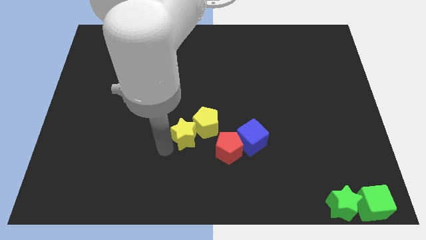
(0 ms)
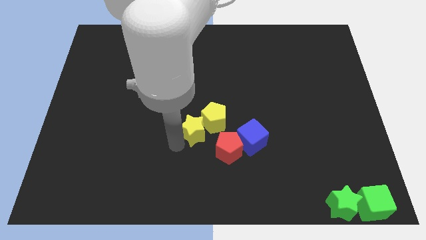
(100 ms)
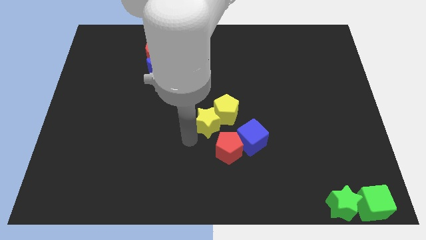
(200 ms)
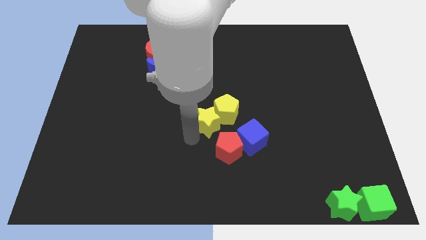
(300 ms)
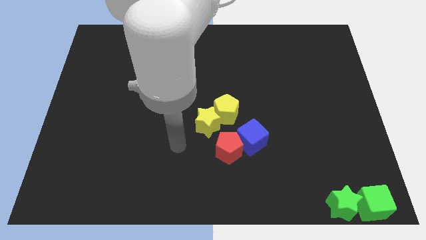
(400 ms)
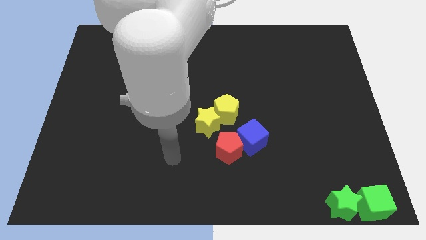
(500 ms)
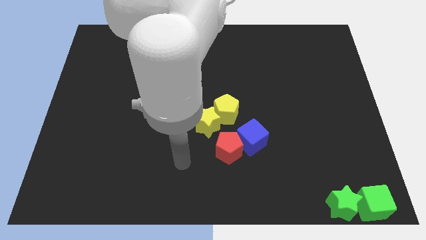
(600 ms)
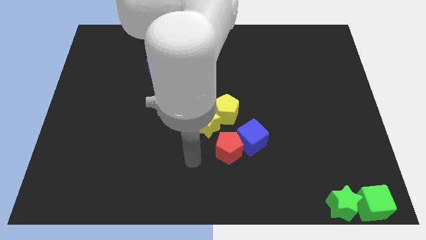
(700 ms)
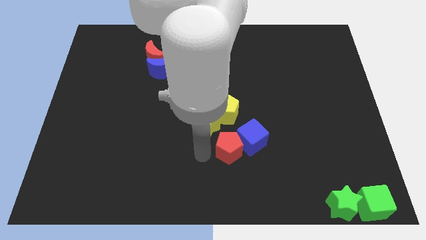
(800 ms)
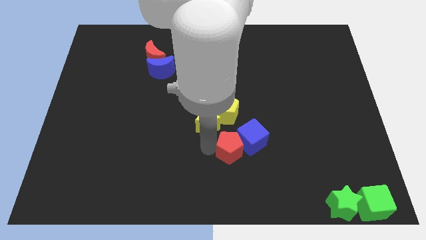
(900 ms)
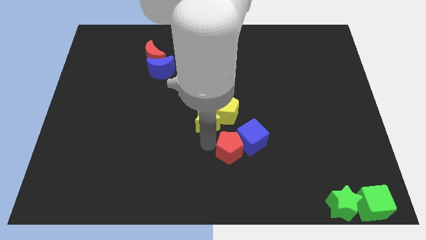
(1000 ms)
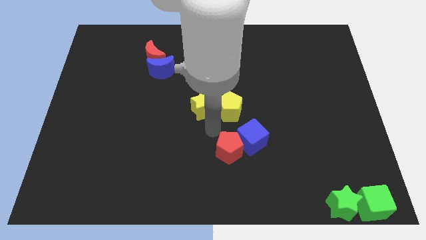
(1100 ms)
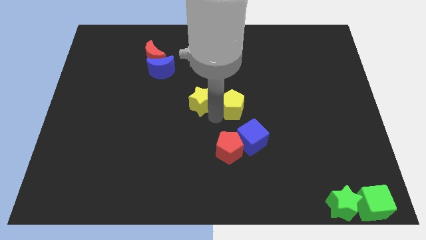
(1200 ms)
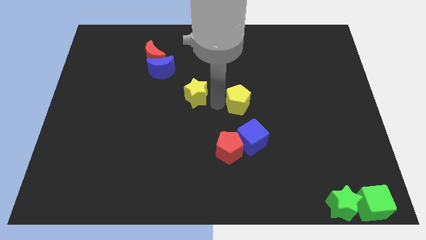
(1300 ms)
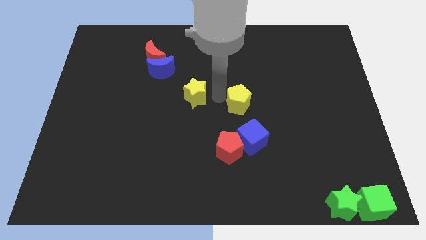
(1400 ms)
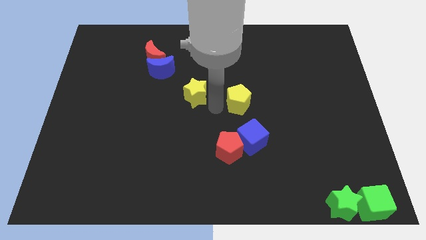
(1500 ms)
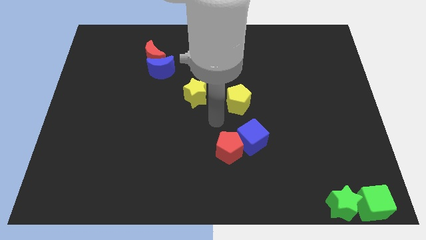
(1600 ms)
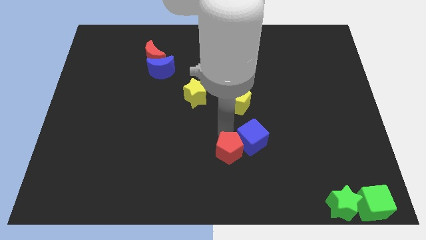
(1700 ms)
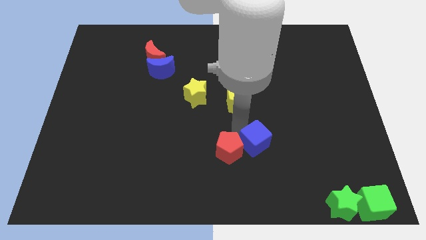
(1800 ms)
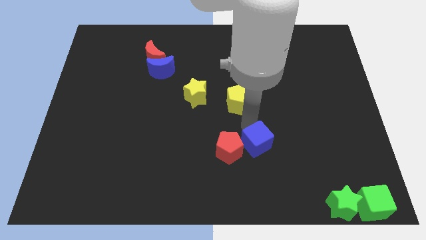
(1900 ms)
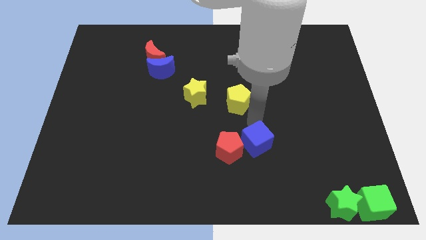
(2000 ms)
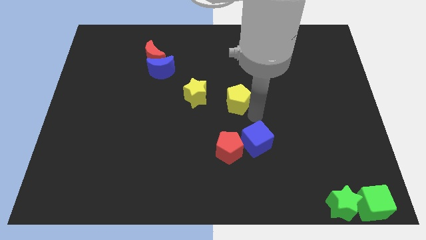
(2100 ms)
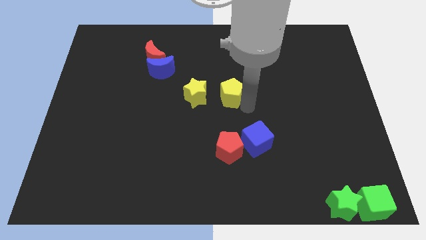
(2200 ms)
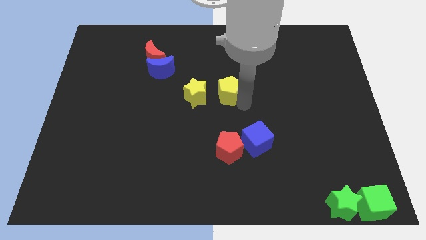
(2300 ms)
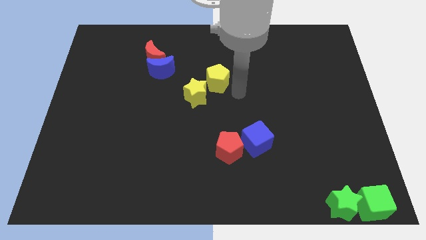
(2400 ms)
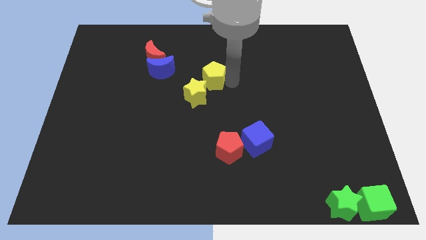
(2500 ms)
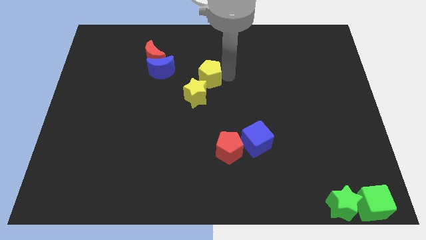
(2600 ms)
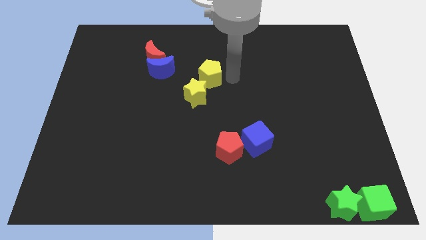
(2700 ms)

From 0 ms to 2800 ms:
put the group of yellow blocks at the center of the board

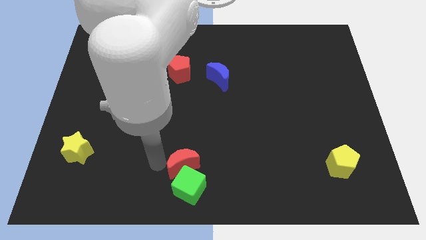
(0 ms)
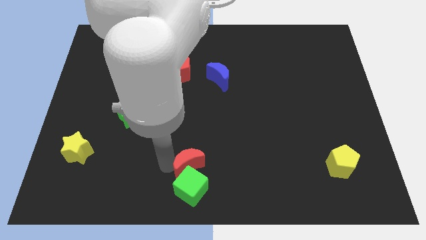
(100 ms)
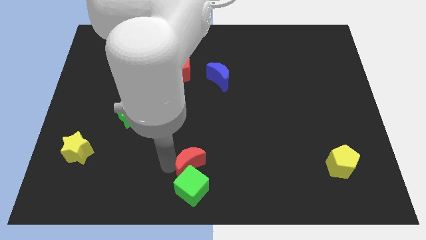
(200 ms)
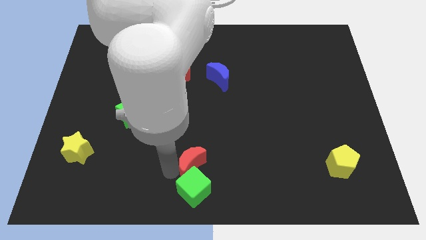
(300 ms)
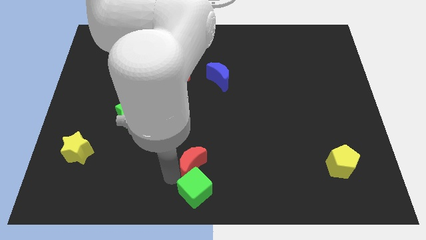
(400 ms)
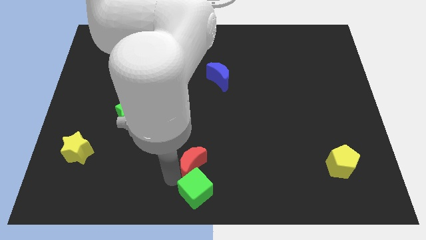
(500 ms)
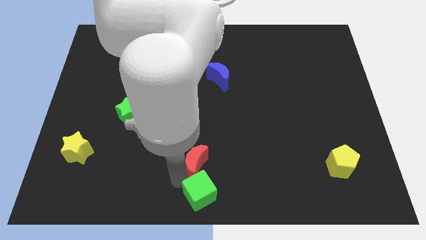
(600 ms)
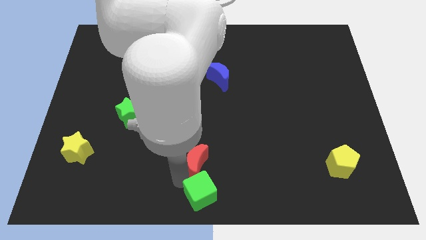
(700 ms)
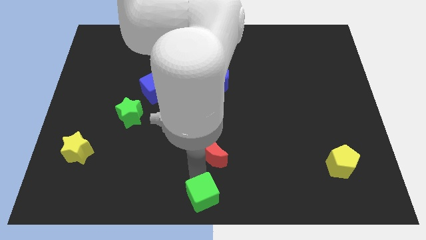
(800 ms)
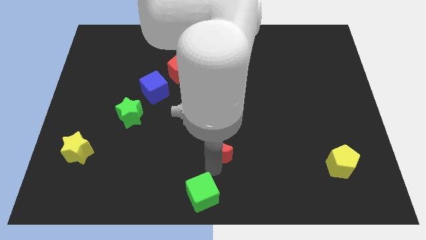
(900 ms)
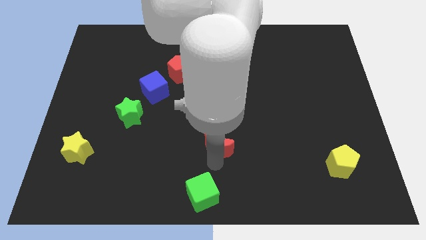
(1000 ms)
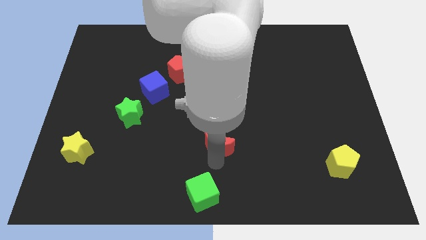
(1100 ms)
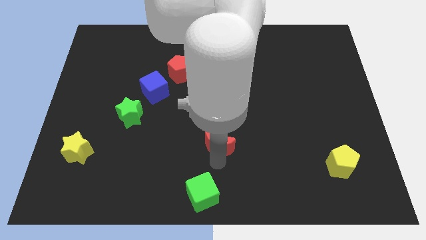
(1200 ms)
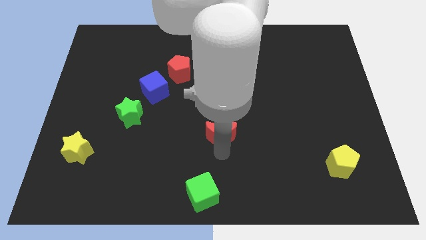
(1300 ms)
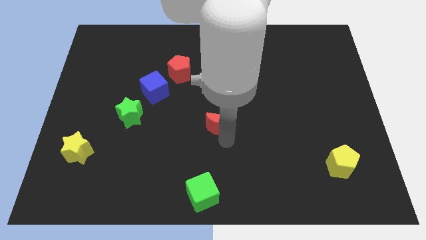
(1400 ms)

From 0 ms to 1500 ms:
place the red moon parallel right to the green star

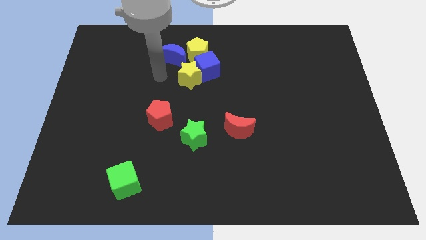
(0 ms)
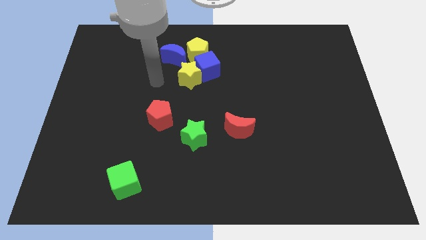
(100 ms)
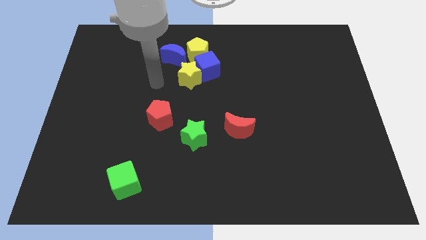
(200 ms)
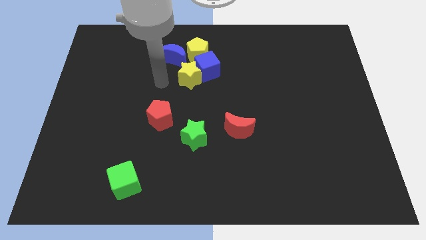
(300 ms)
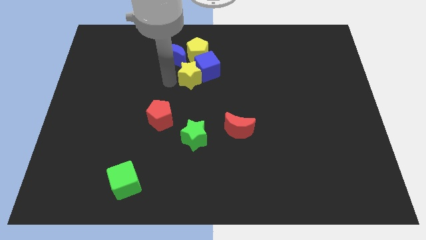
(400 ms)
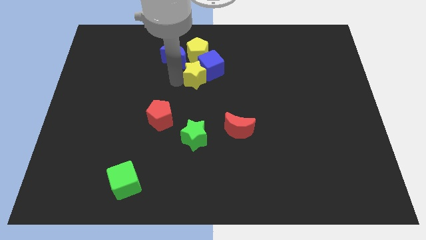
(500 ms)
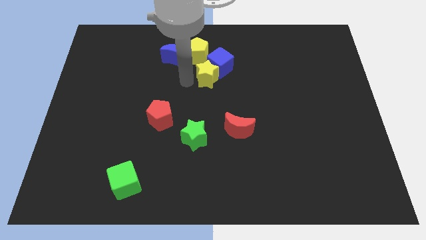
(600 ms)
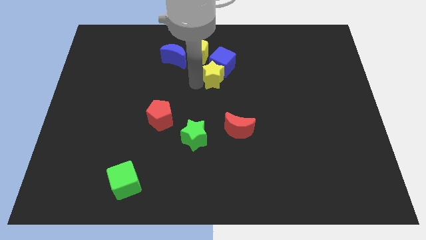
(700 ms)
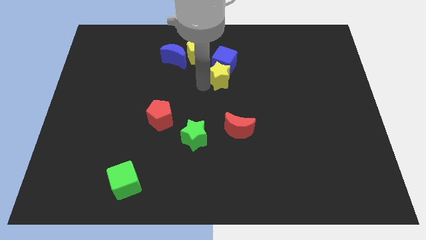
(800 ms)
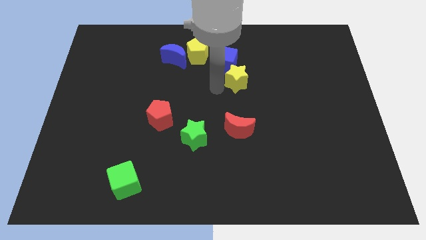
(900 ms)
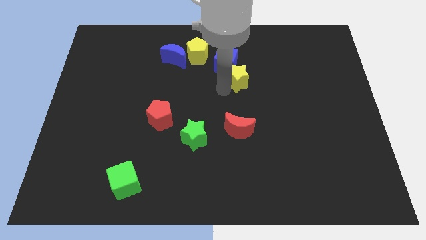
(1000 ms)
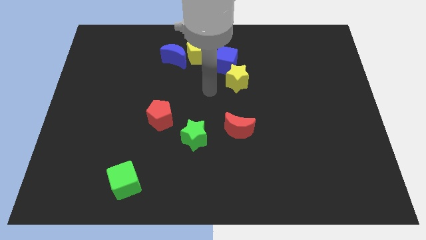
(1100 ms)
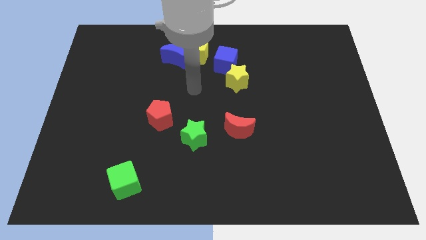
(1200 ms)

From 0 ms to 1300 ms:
push the blue cube with yellow star

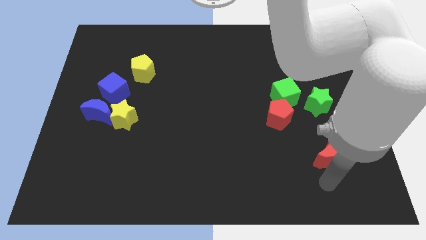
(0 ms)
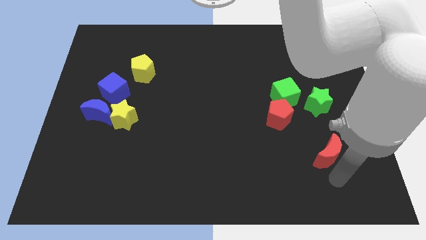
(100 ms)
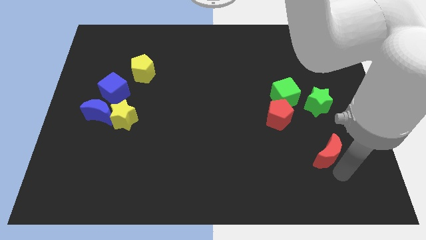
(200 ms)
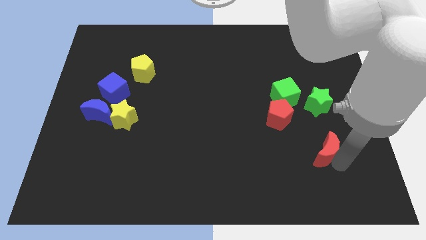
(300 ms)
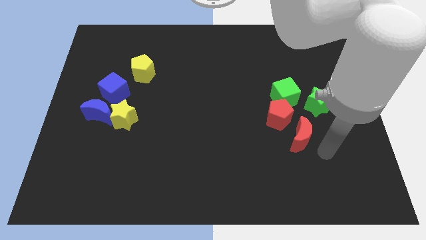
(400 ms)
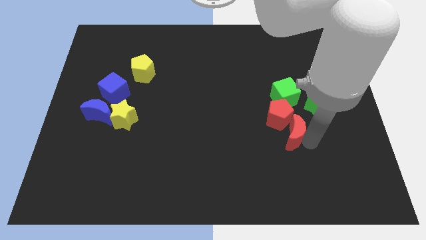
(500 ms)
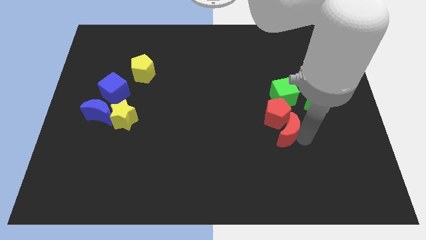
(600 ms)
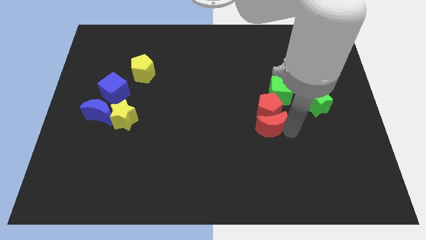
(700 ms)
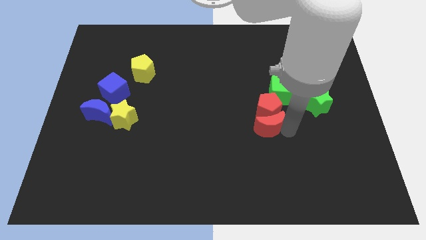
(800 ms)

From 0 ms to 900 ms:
move red crescent into red pentagon

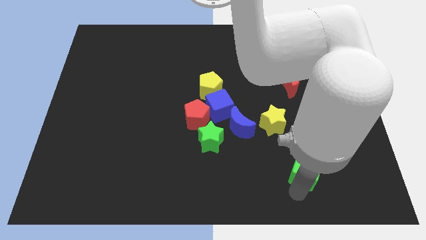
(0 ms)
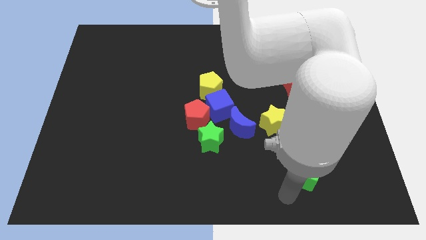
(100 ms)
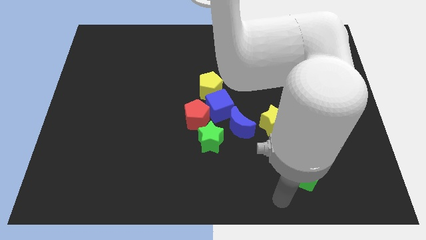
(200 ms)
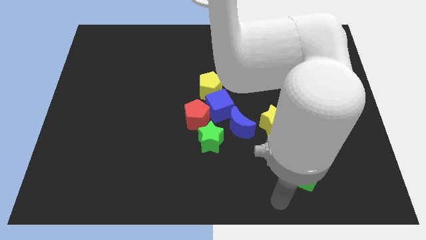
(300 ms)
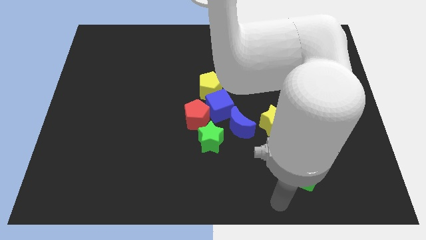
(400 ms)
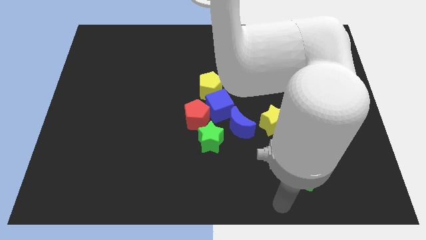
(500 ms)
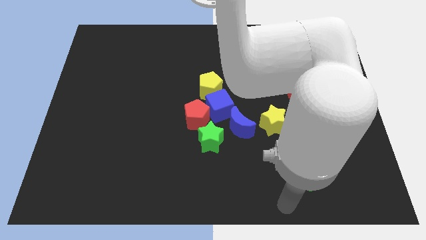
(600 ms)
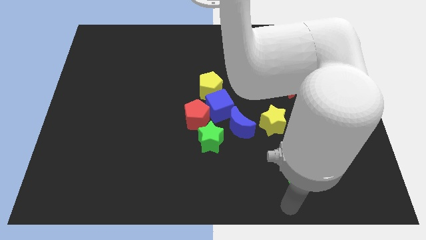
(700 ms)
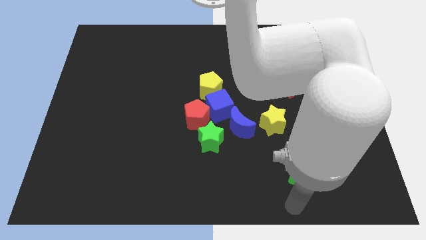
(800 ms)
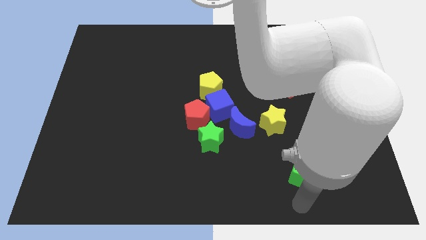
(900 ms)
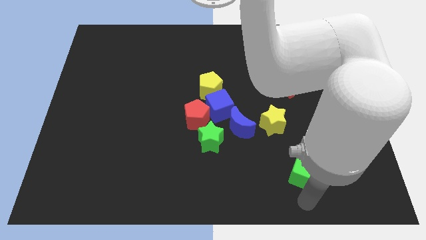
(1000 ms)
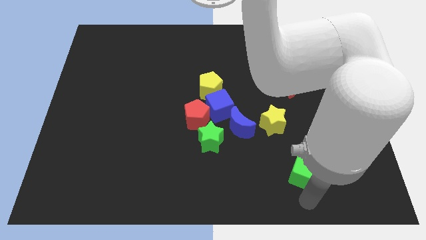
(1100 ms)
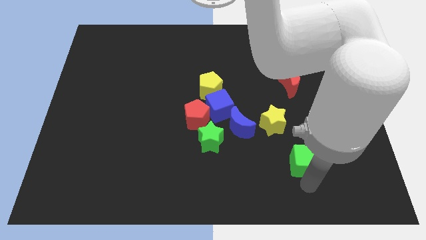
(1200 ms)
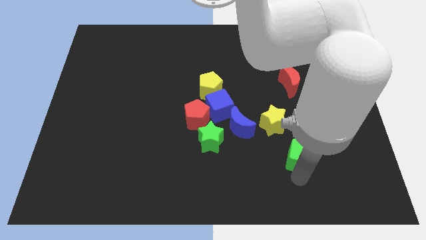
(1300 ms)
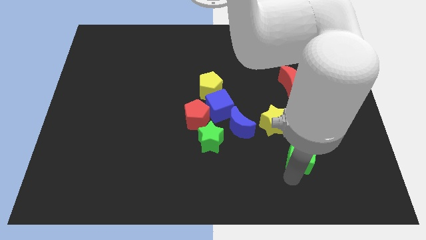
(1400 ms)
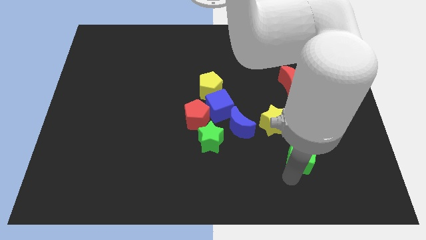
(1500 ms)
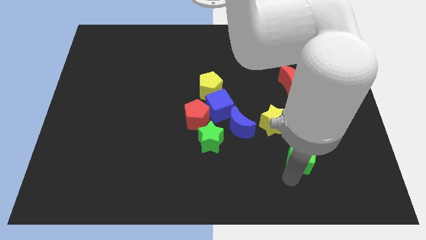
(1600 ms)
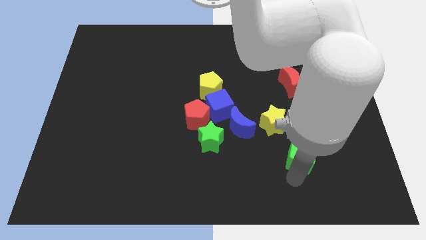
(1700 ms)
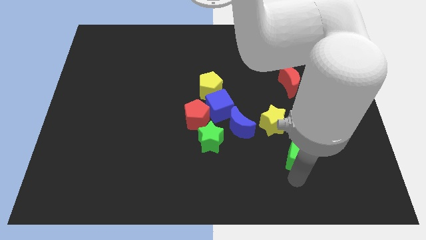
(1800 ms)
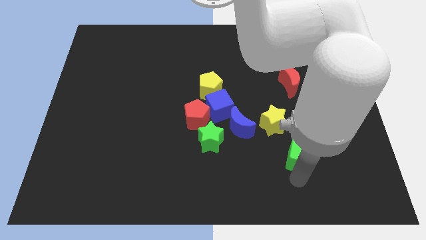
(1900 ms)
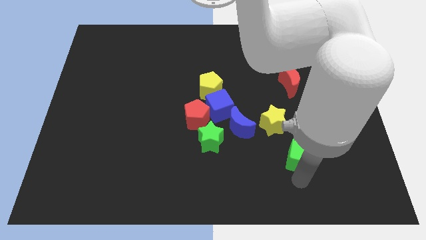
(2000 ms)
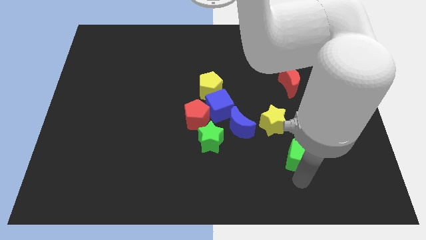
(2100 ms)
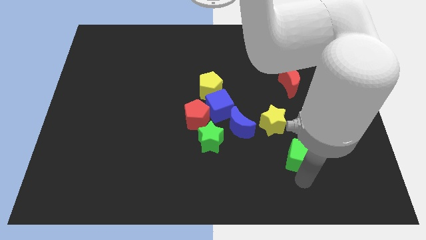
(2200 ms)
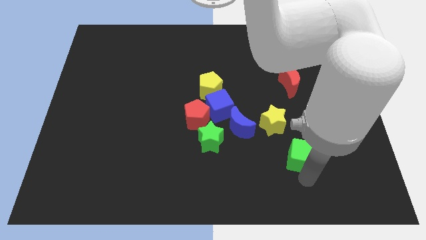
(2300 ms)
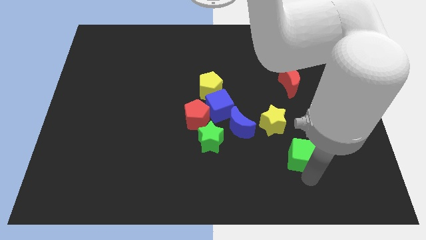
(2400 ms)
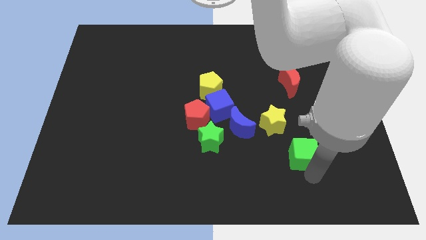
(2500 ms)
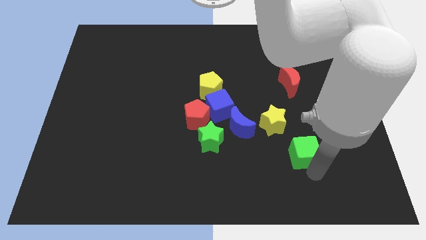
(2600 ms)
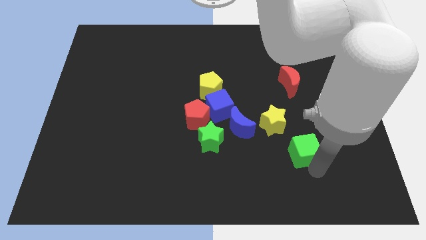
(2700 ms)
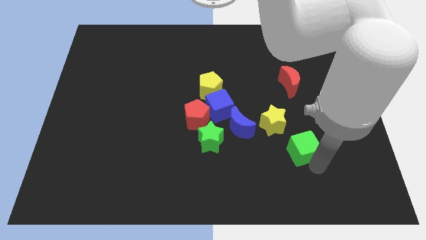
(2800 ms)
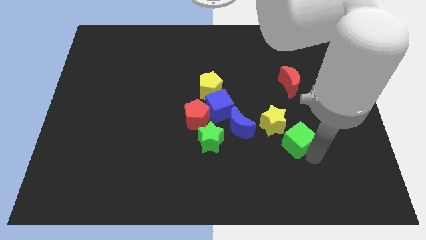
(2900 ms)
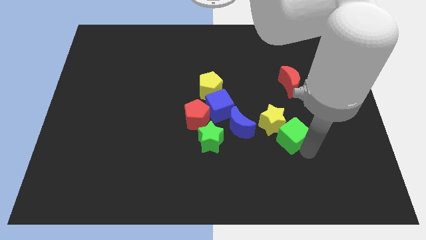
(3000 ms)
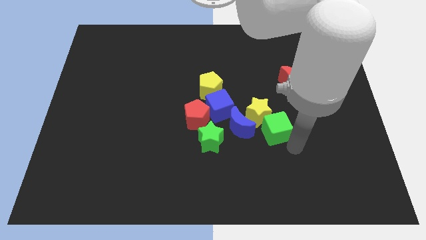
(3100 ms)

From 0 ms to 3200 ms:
push green cube towards yellow star
